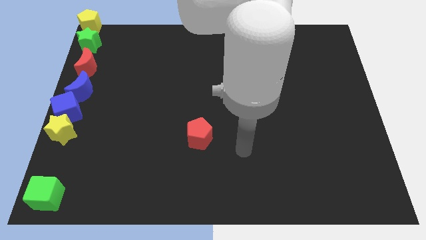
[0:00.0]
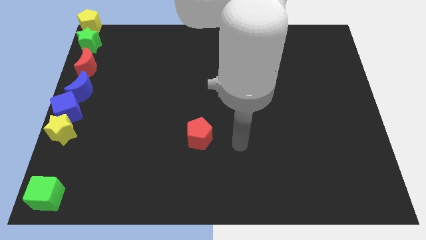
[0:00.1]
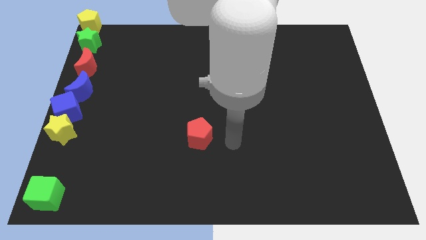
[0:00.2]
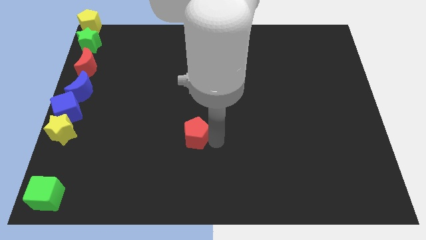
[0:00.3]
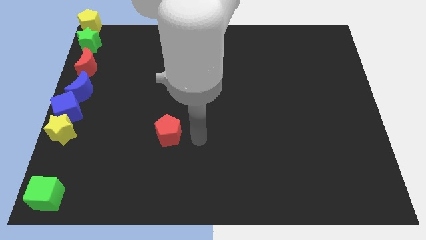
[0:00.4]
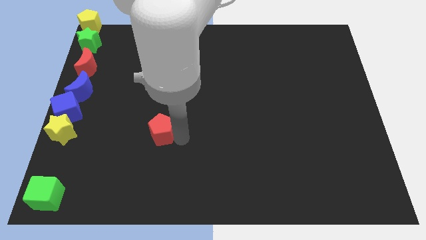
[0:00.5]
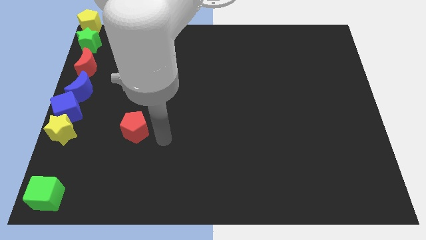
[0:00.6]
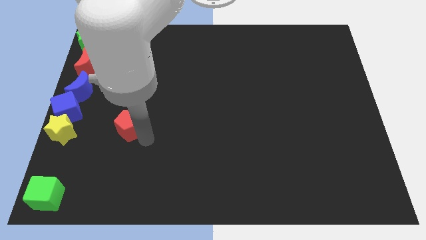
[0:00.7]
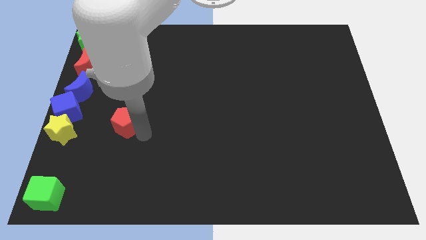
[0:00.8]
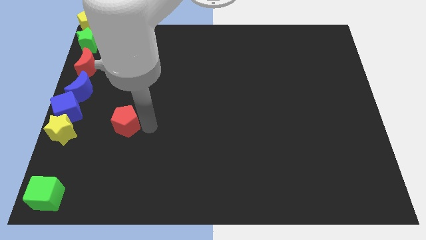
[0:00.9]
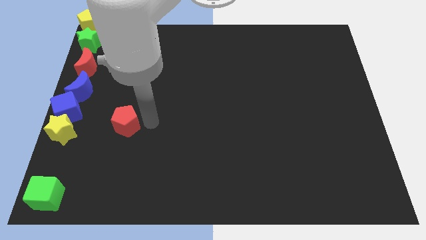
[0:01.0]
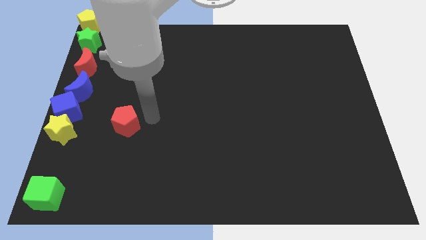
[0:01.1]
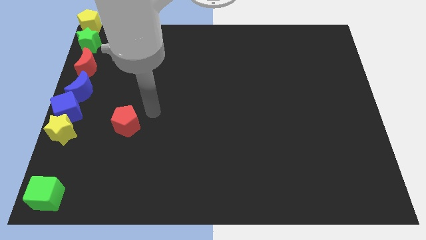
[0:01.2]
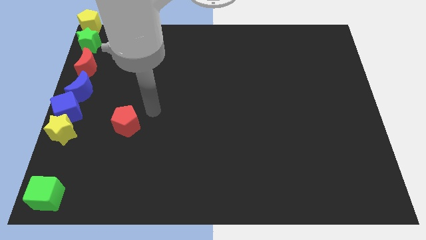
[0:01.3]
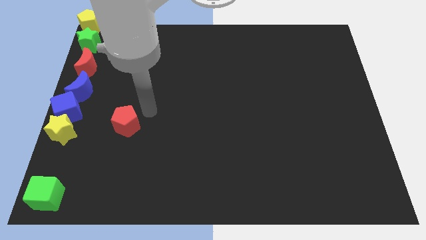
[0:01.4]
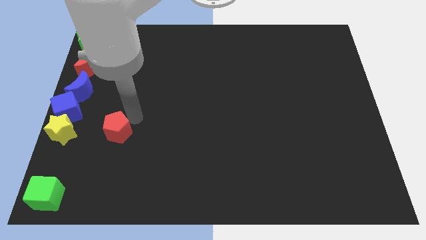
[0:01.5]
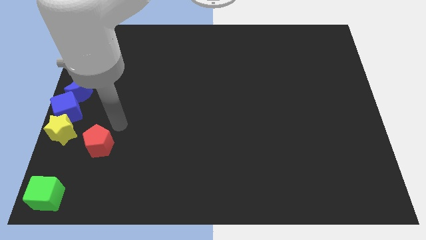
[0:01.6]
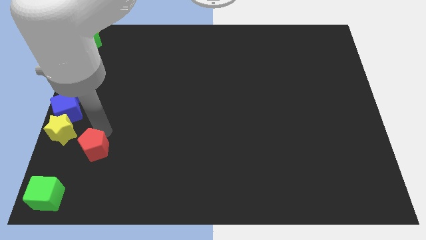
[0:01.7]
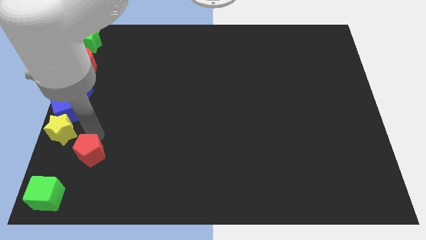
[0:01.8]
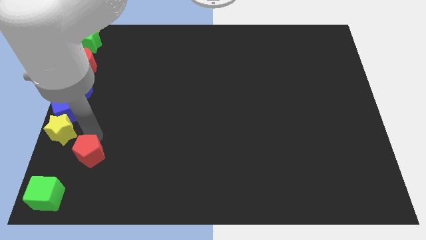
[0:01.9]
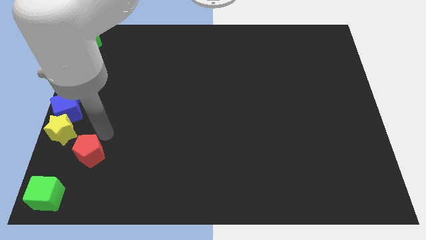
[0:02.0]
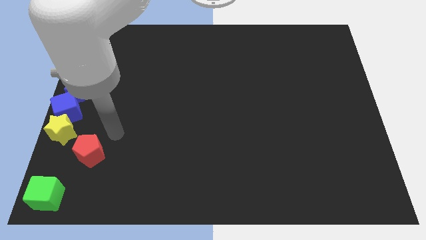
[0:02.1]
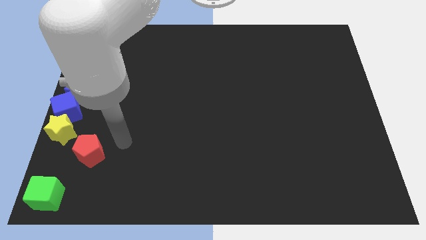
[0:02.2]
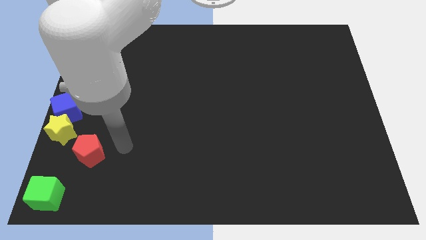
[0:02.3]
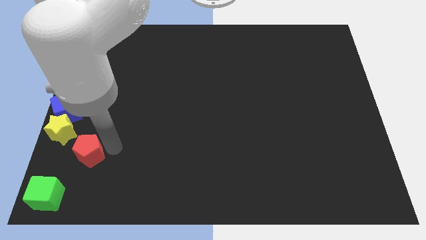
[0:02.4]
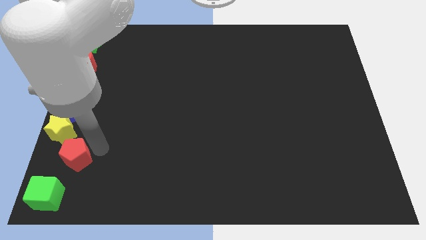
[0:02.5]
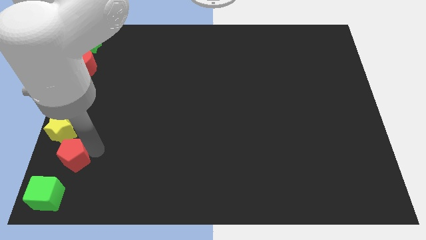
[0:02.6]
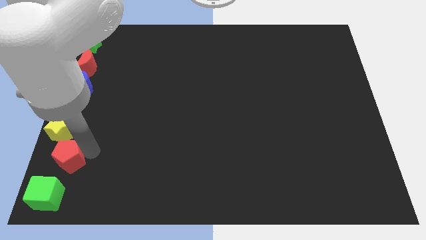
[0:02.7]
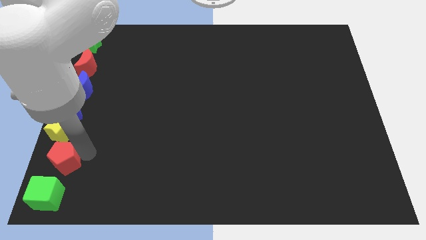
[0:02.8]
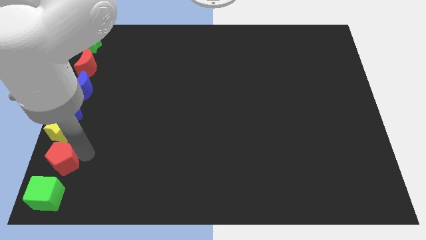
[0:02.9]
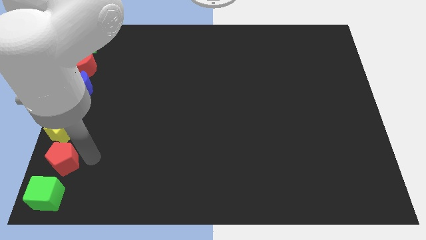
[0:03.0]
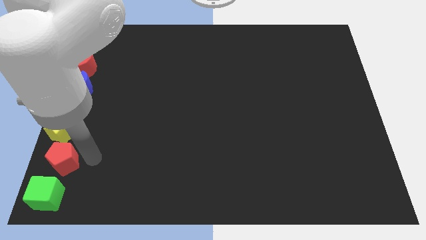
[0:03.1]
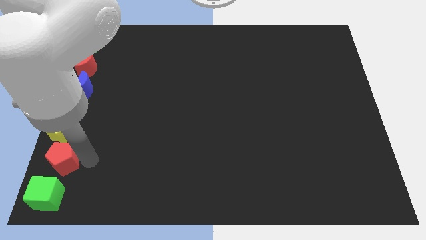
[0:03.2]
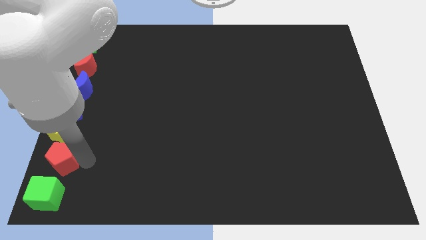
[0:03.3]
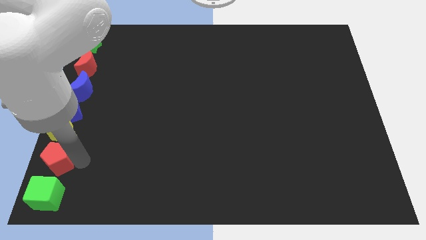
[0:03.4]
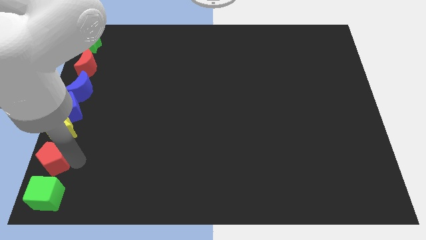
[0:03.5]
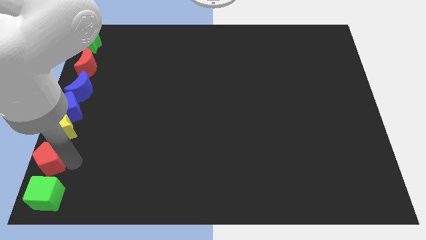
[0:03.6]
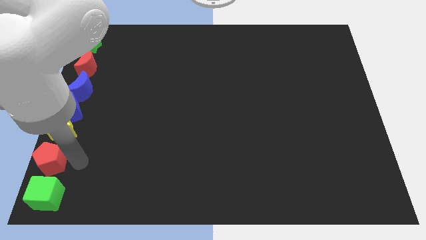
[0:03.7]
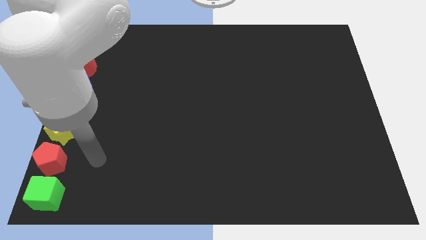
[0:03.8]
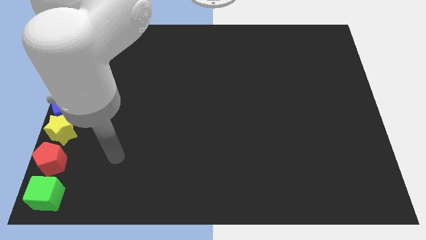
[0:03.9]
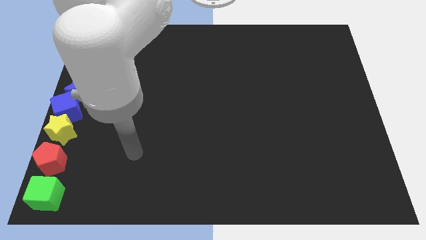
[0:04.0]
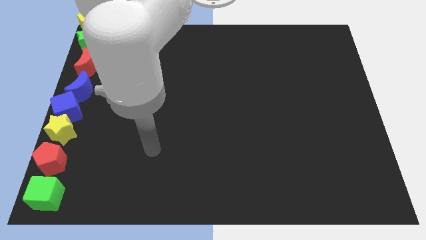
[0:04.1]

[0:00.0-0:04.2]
place the red pentagon in between the yellow star and the green cube

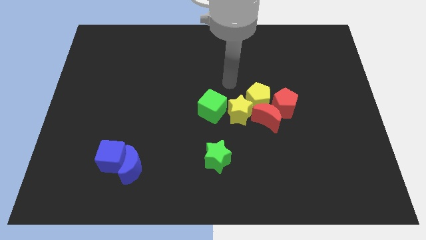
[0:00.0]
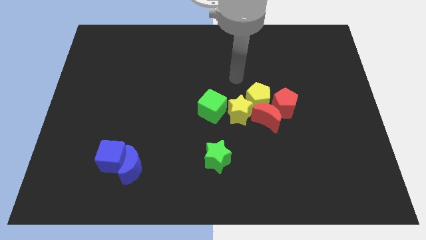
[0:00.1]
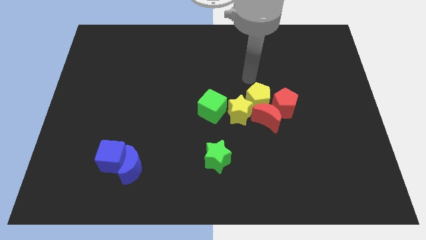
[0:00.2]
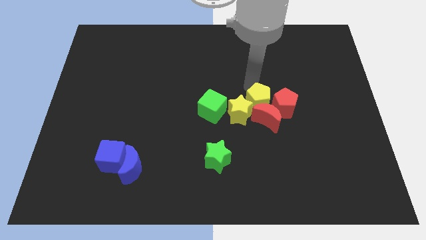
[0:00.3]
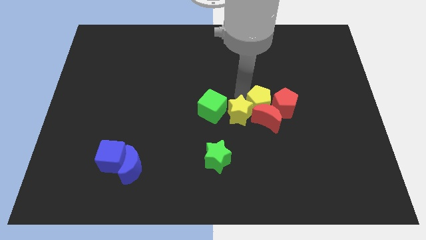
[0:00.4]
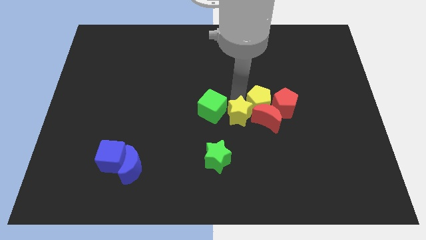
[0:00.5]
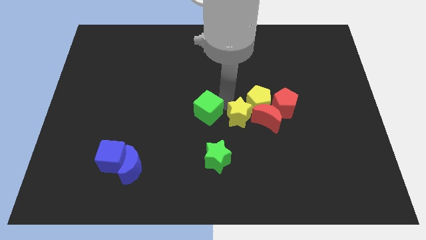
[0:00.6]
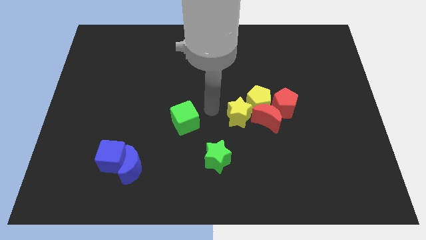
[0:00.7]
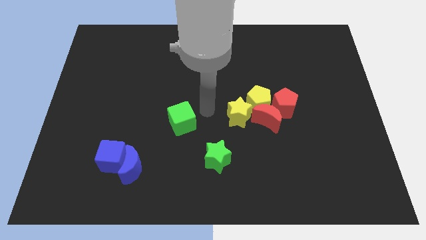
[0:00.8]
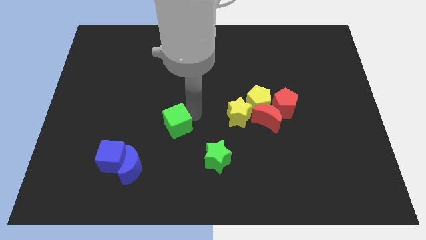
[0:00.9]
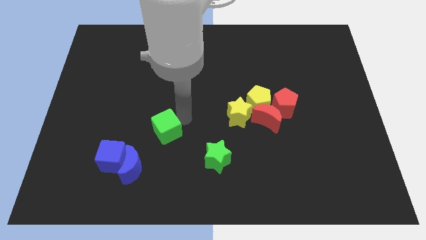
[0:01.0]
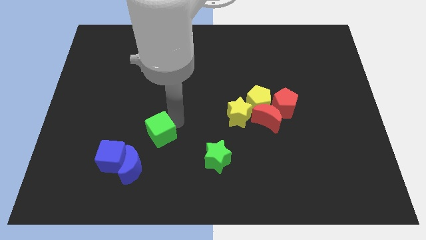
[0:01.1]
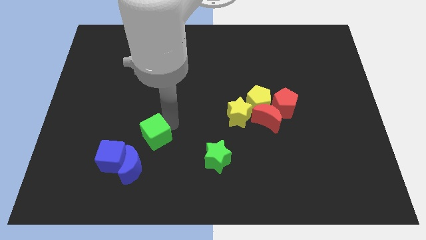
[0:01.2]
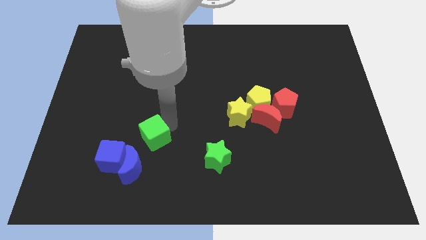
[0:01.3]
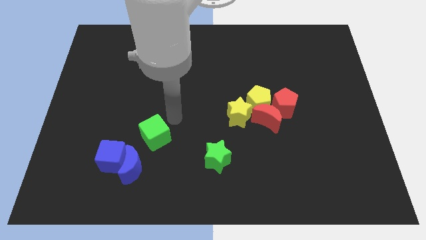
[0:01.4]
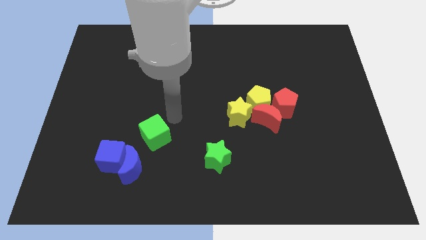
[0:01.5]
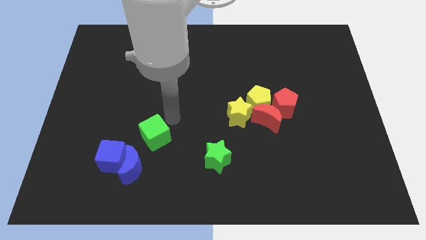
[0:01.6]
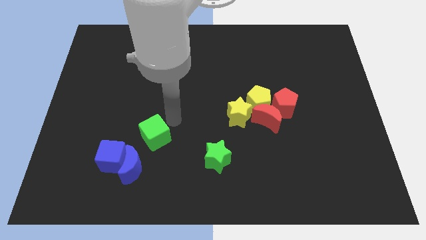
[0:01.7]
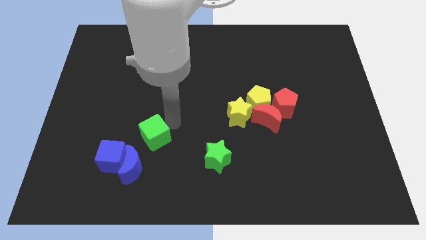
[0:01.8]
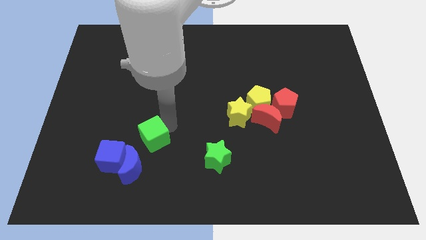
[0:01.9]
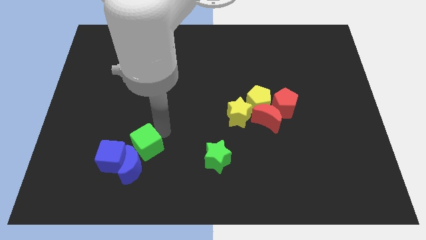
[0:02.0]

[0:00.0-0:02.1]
move the green cube to the top right side of the blue moon

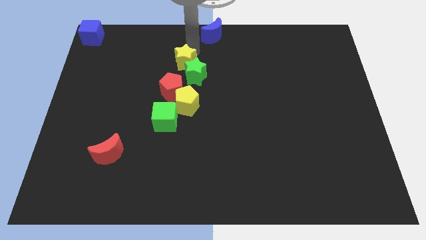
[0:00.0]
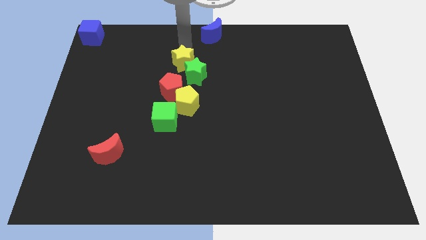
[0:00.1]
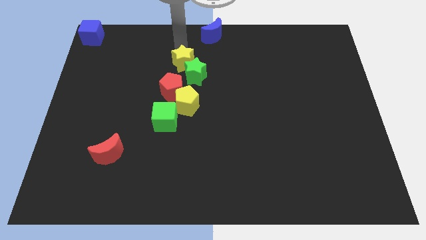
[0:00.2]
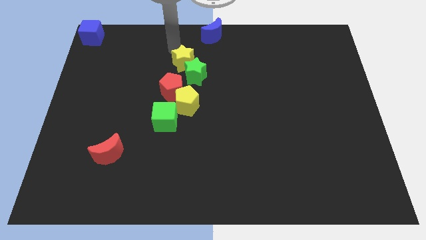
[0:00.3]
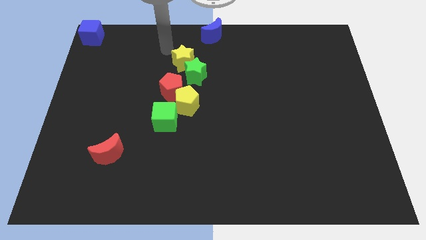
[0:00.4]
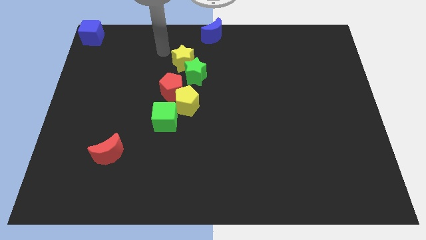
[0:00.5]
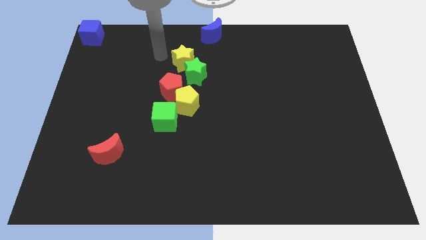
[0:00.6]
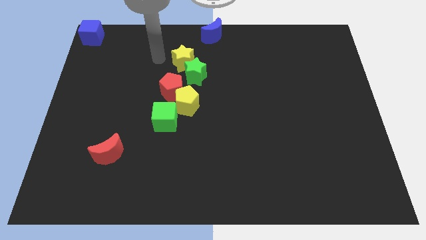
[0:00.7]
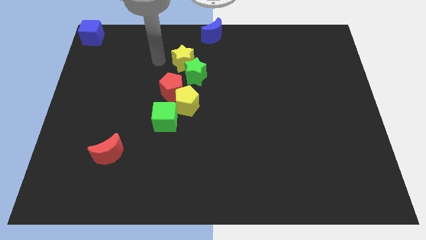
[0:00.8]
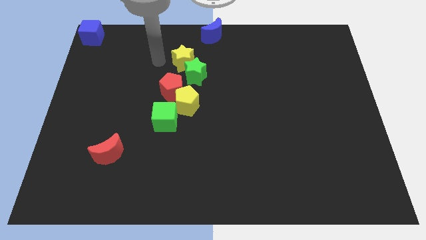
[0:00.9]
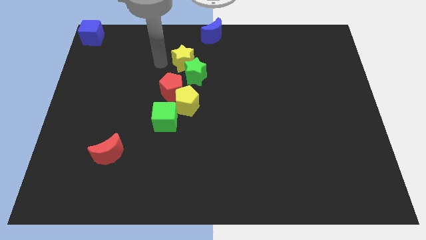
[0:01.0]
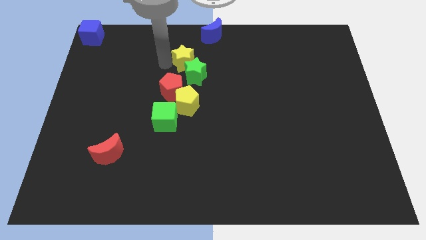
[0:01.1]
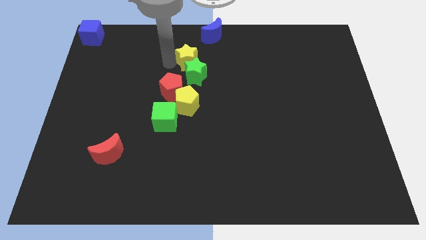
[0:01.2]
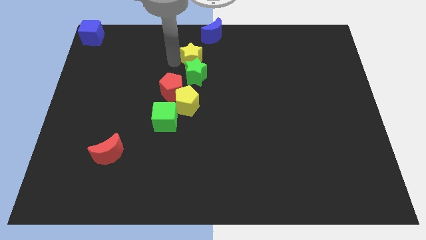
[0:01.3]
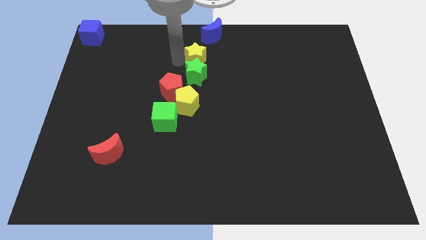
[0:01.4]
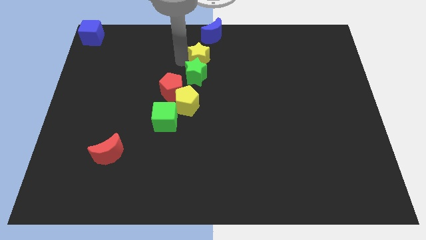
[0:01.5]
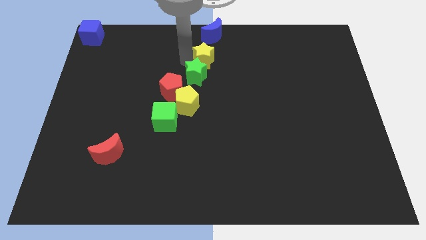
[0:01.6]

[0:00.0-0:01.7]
separate yellow star from the green star

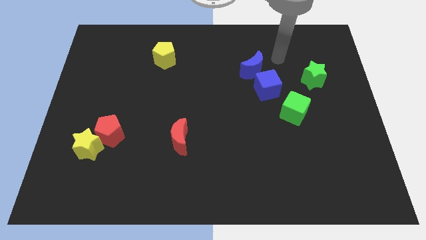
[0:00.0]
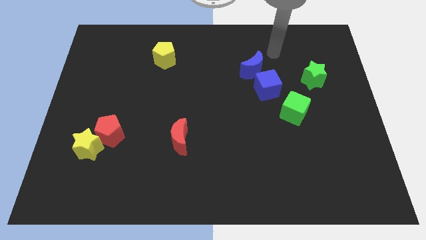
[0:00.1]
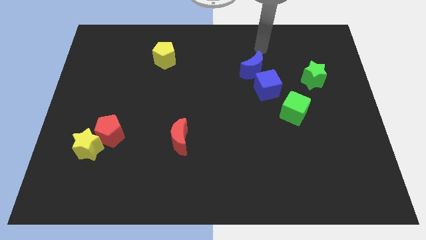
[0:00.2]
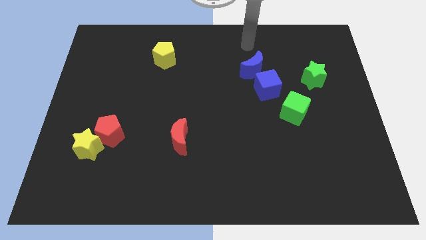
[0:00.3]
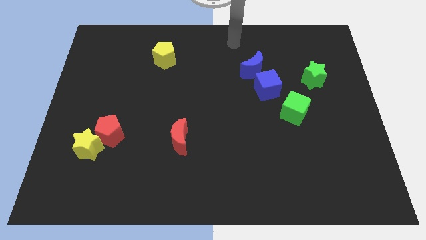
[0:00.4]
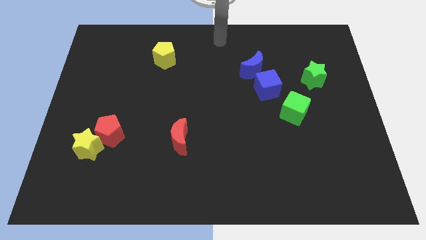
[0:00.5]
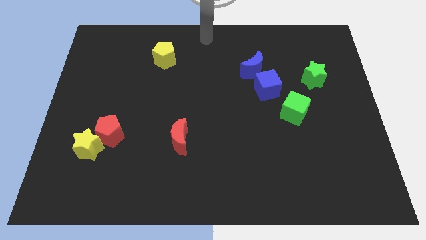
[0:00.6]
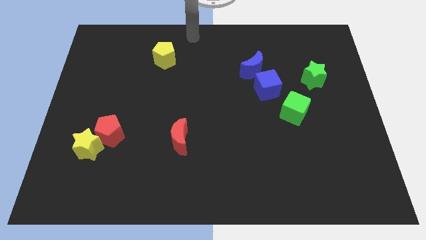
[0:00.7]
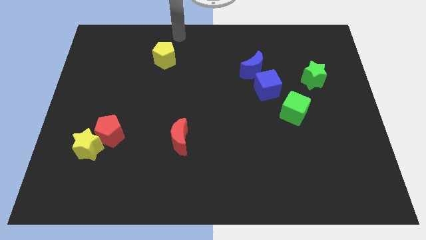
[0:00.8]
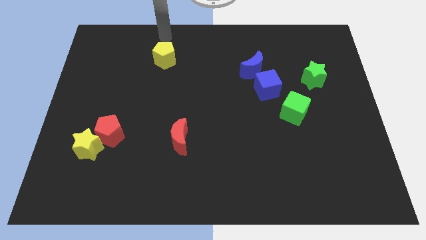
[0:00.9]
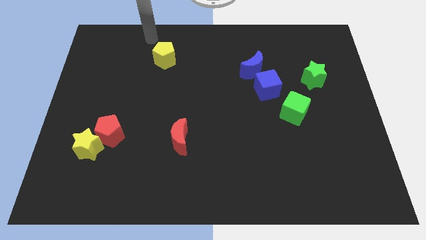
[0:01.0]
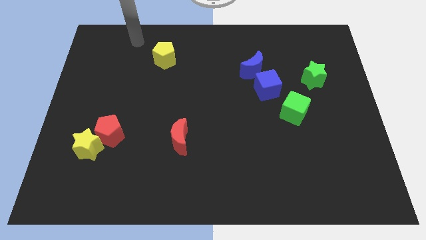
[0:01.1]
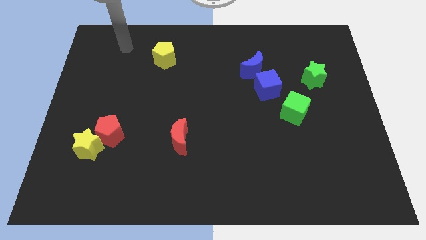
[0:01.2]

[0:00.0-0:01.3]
move your arm to the top left of the board
